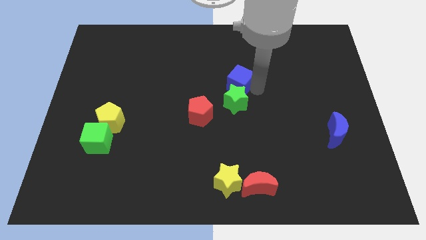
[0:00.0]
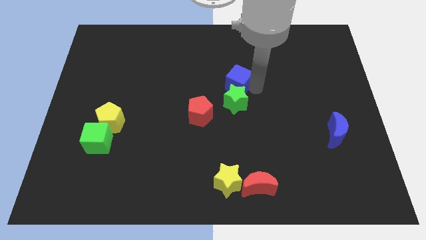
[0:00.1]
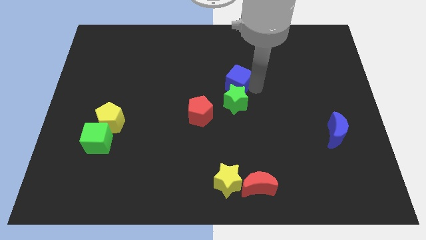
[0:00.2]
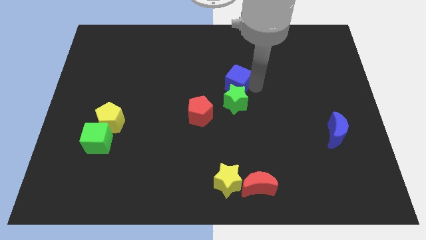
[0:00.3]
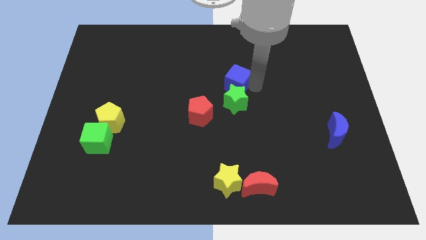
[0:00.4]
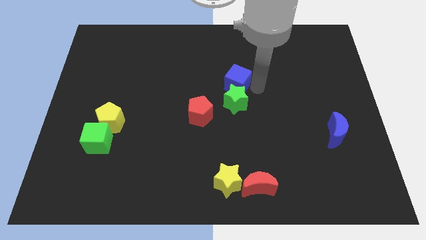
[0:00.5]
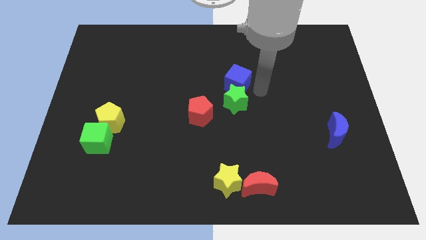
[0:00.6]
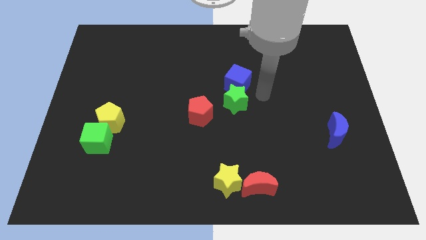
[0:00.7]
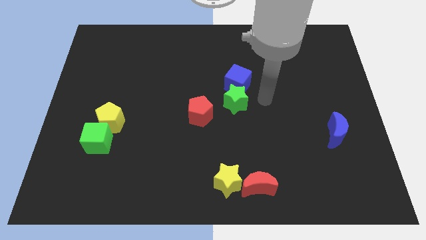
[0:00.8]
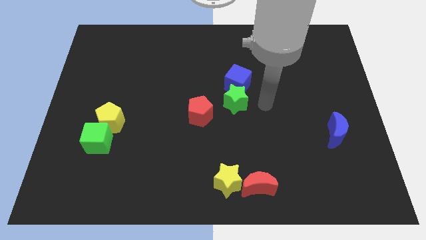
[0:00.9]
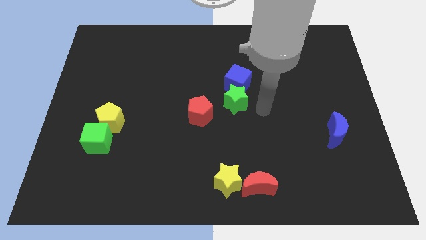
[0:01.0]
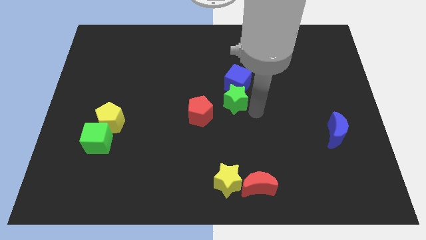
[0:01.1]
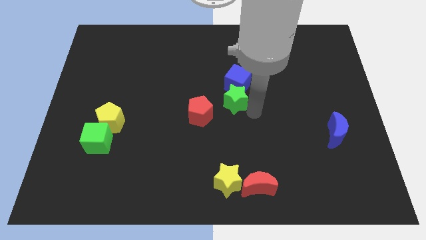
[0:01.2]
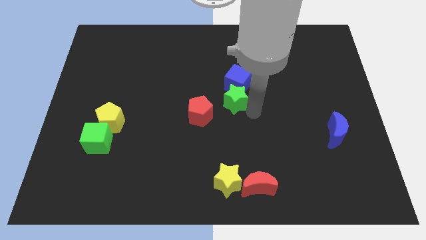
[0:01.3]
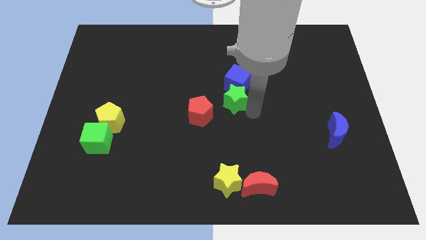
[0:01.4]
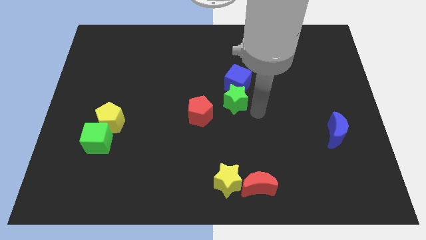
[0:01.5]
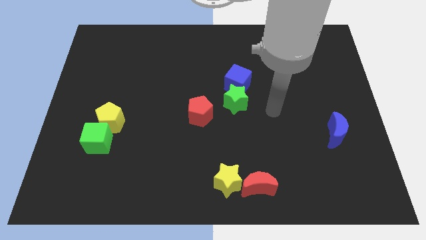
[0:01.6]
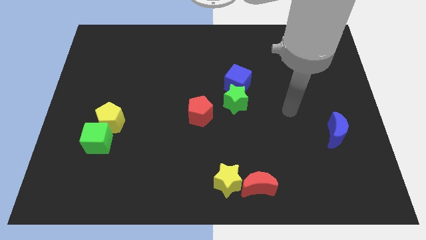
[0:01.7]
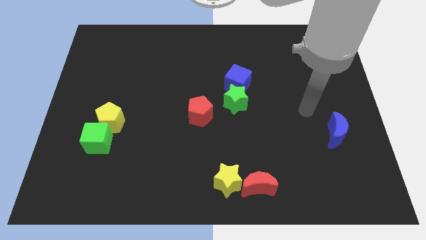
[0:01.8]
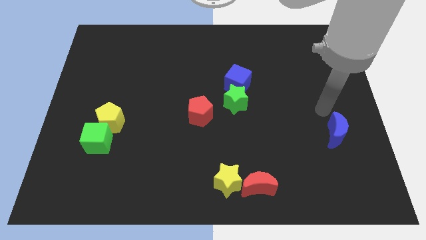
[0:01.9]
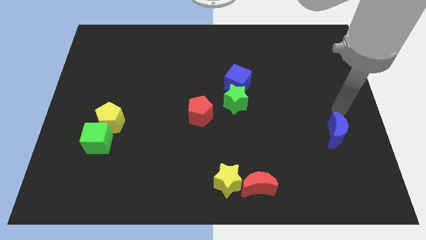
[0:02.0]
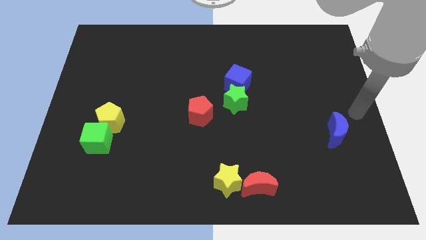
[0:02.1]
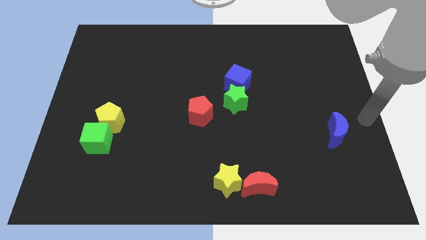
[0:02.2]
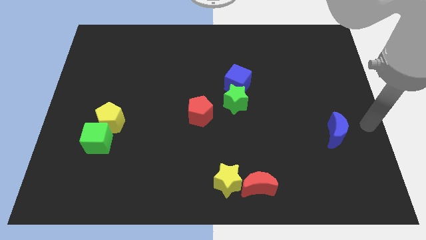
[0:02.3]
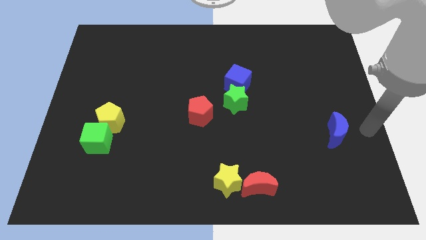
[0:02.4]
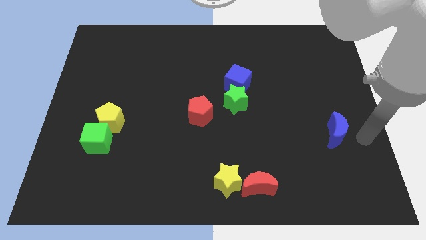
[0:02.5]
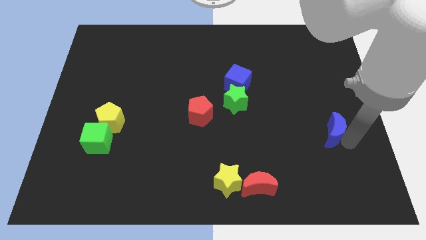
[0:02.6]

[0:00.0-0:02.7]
place your arm right to blue moon

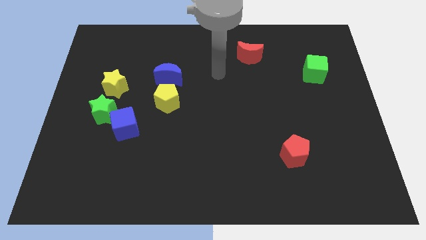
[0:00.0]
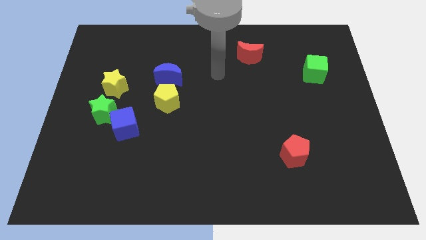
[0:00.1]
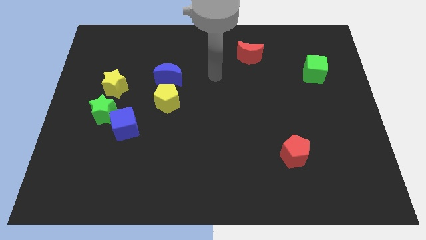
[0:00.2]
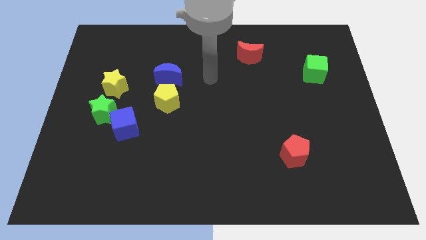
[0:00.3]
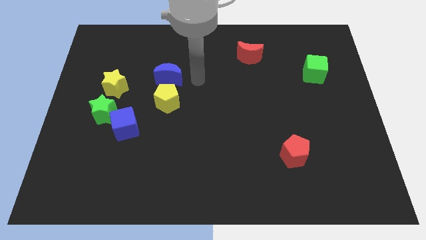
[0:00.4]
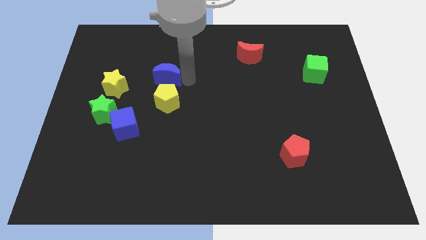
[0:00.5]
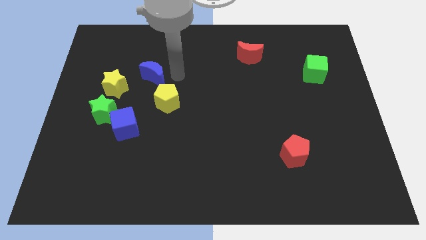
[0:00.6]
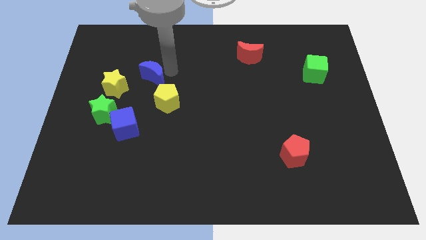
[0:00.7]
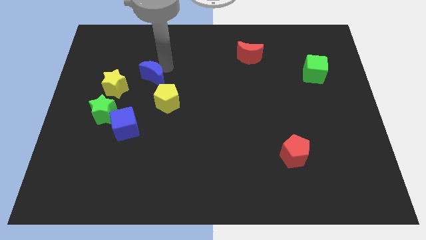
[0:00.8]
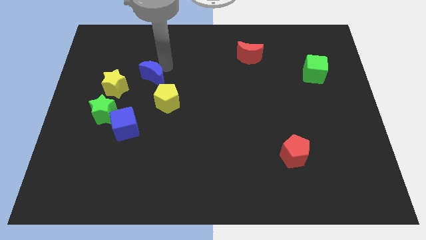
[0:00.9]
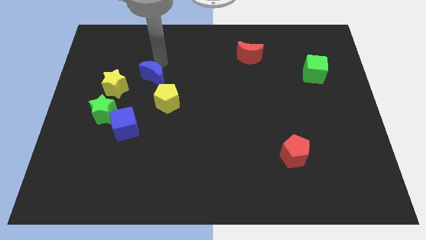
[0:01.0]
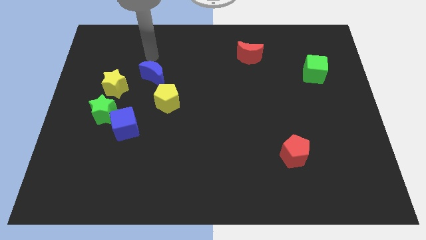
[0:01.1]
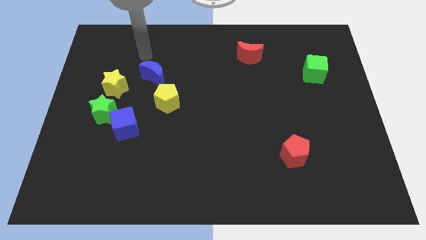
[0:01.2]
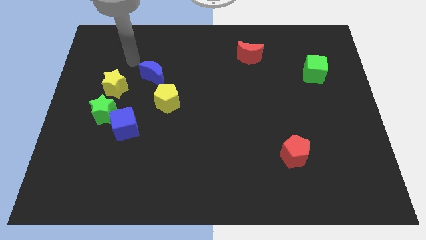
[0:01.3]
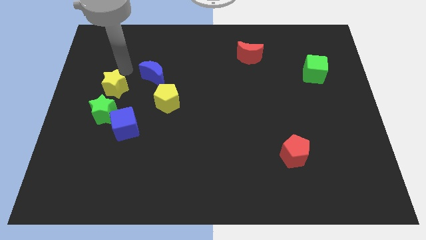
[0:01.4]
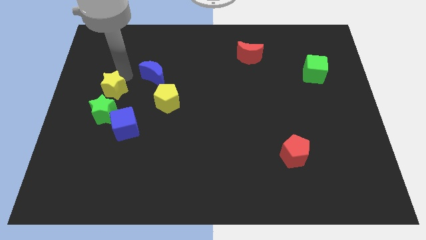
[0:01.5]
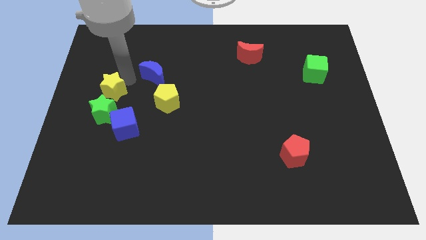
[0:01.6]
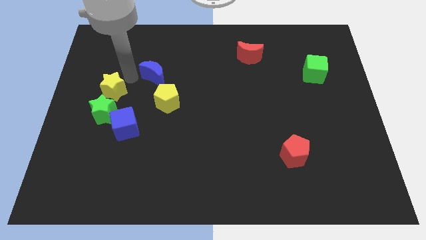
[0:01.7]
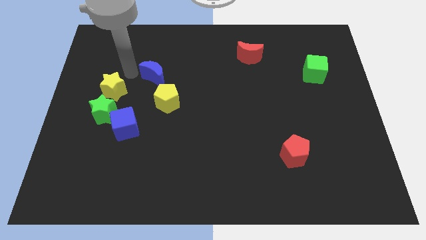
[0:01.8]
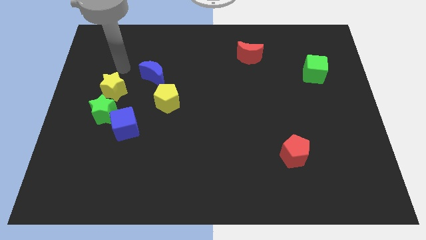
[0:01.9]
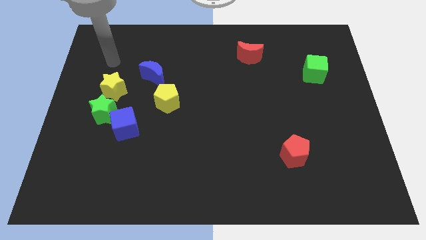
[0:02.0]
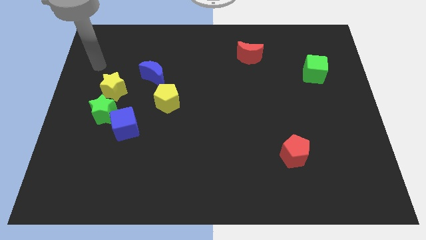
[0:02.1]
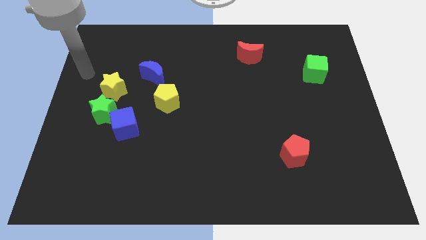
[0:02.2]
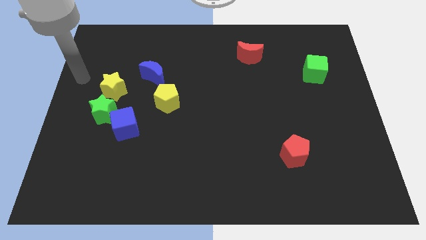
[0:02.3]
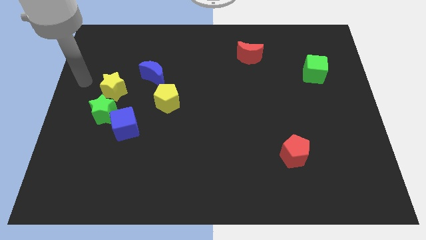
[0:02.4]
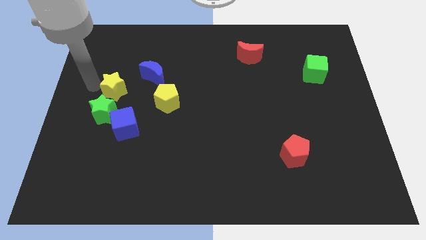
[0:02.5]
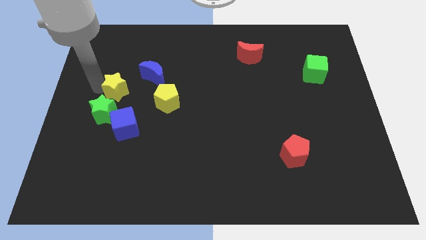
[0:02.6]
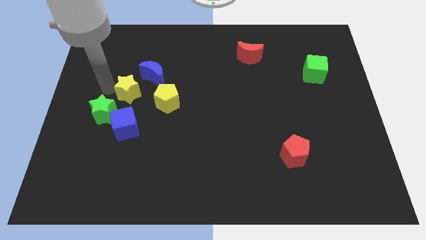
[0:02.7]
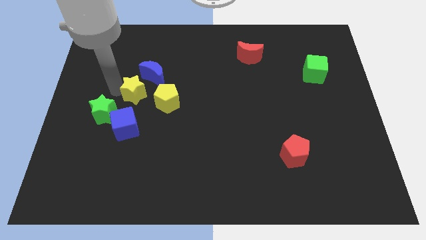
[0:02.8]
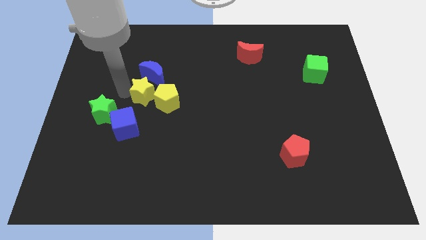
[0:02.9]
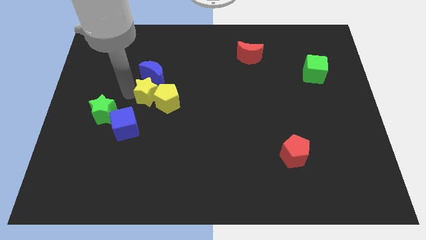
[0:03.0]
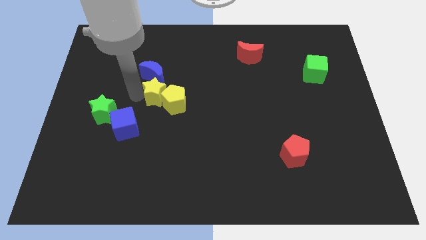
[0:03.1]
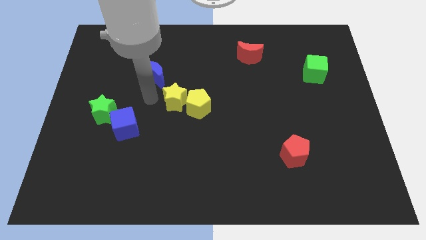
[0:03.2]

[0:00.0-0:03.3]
move the yellow star into the yellow pentagon

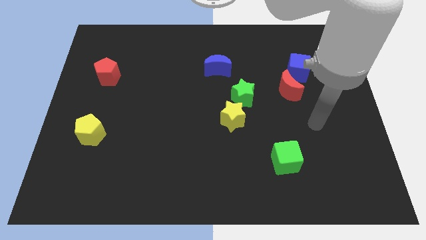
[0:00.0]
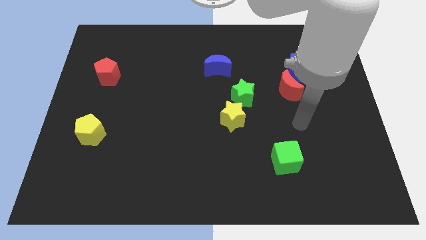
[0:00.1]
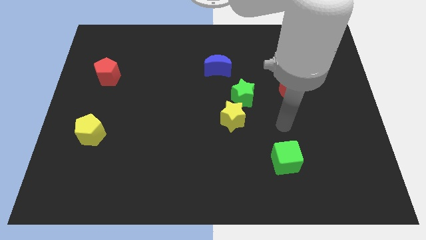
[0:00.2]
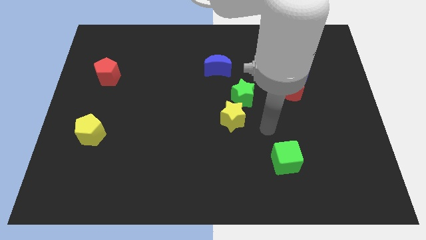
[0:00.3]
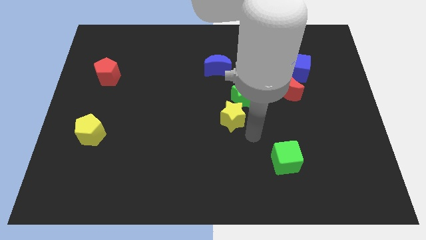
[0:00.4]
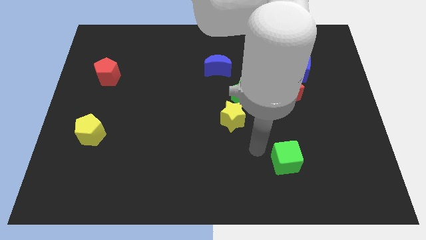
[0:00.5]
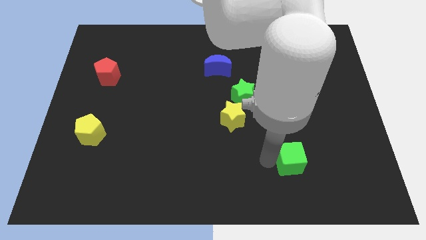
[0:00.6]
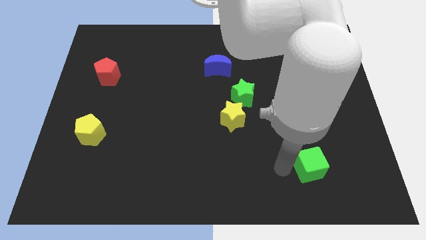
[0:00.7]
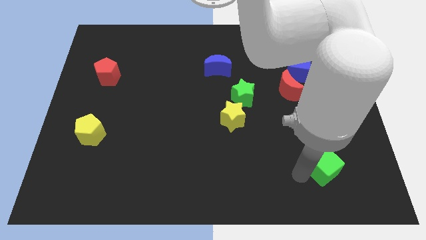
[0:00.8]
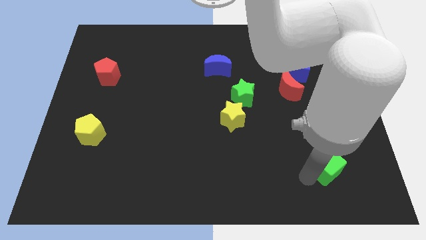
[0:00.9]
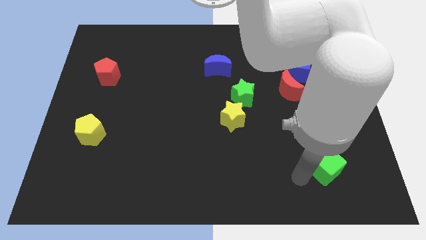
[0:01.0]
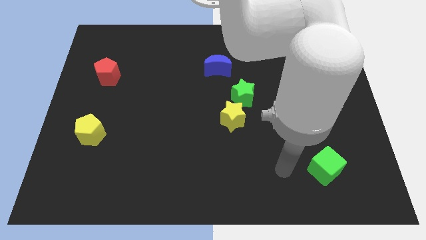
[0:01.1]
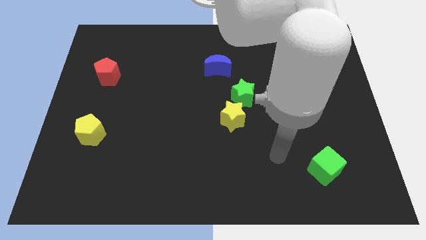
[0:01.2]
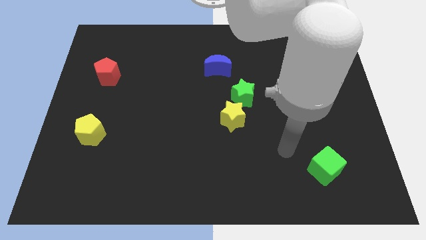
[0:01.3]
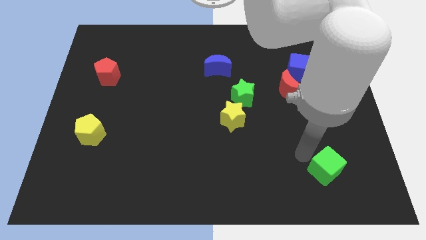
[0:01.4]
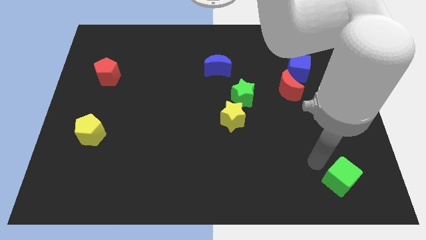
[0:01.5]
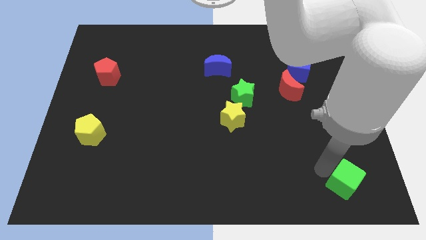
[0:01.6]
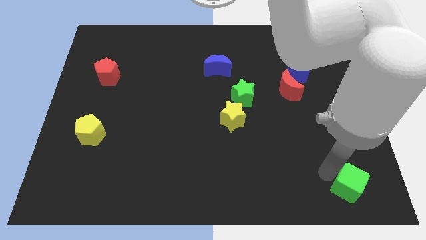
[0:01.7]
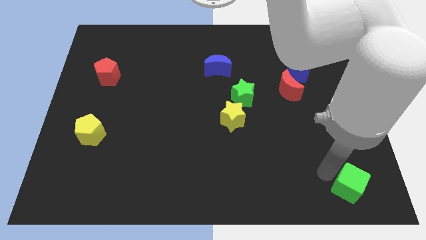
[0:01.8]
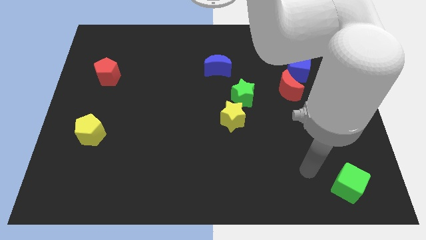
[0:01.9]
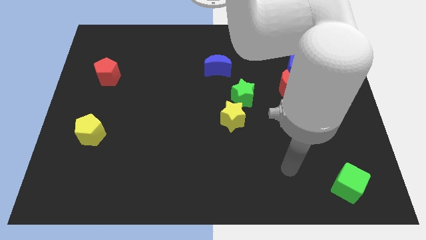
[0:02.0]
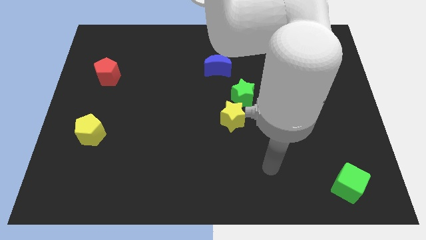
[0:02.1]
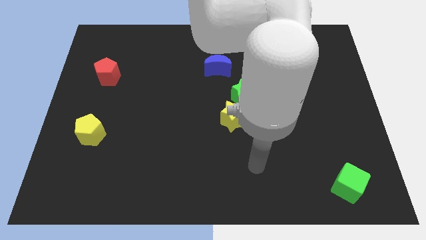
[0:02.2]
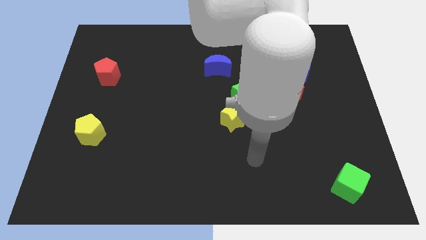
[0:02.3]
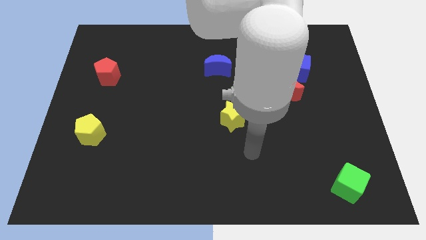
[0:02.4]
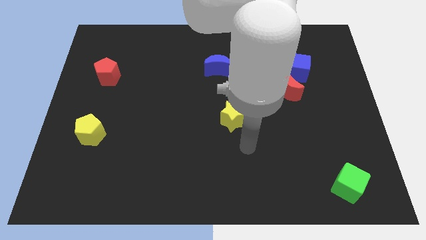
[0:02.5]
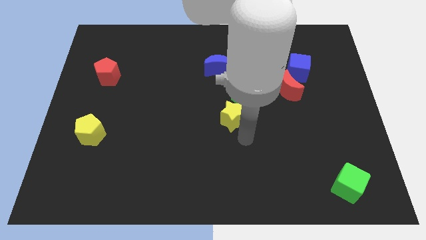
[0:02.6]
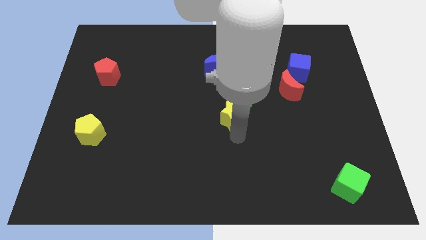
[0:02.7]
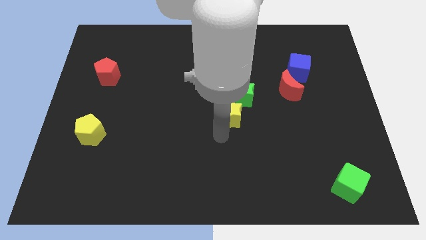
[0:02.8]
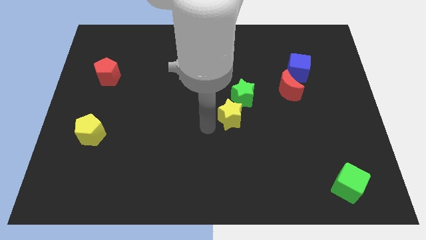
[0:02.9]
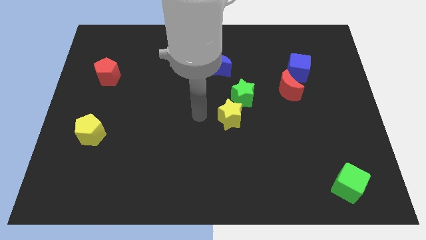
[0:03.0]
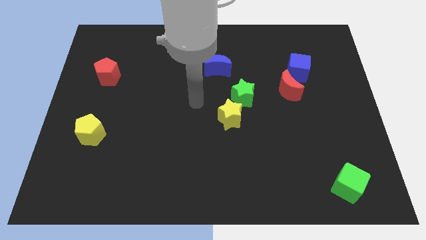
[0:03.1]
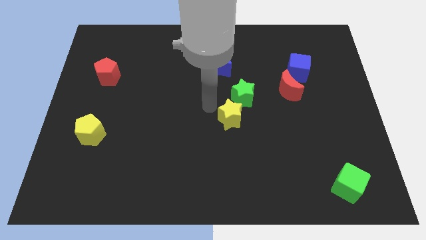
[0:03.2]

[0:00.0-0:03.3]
move the green cube towards the bottom right of the board
